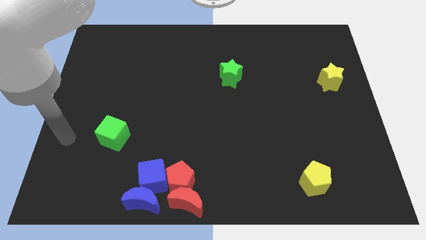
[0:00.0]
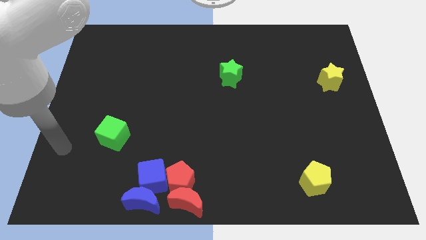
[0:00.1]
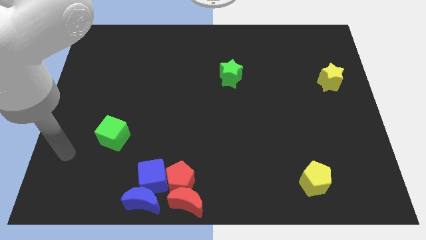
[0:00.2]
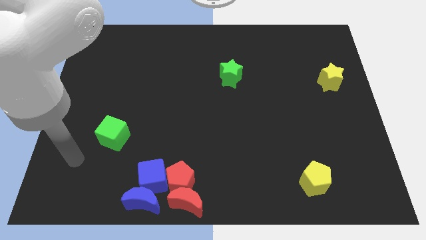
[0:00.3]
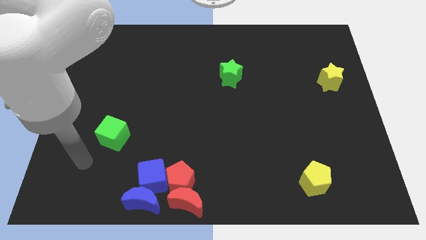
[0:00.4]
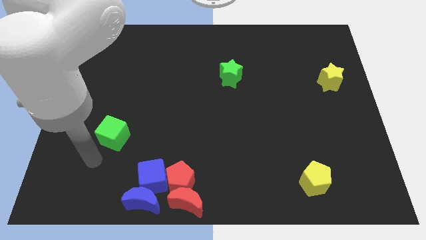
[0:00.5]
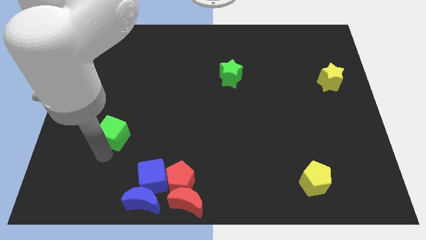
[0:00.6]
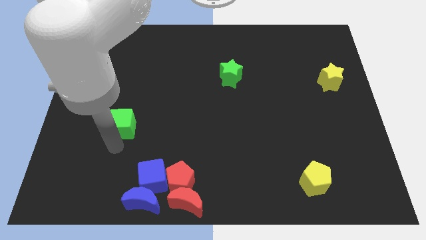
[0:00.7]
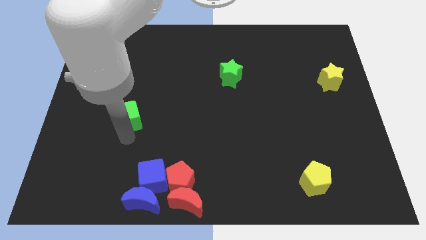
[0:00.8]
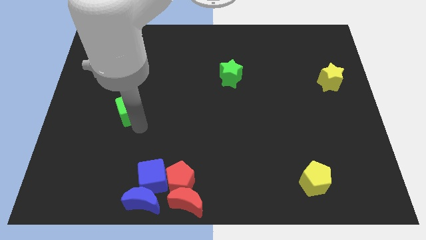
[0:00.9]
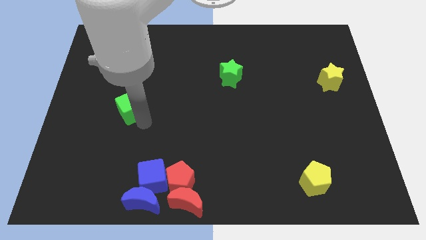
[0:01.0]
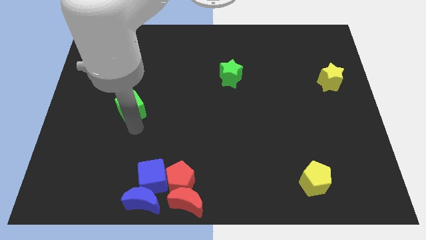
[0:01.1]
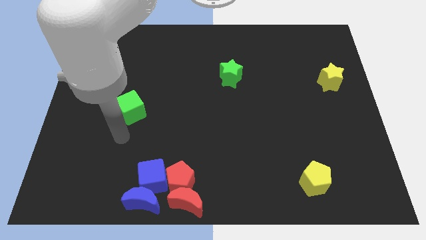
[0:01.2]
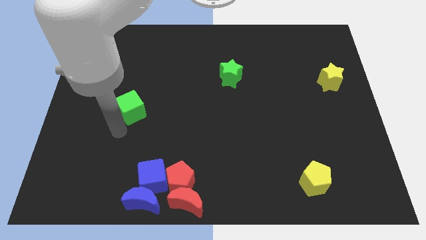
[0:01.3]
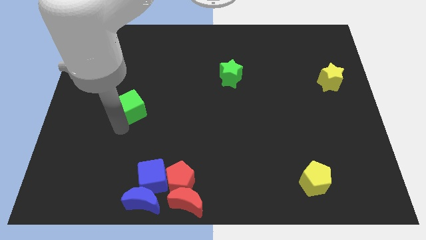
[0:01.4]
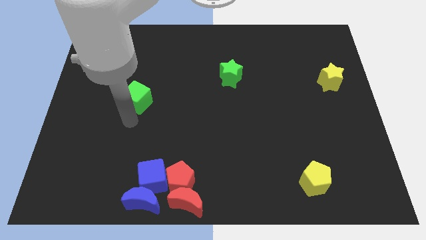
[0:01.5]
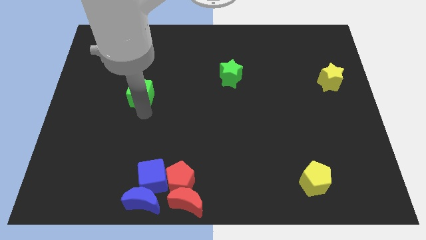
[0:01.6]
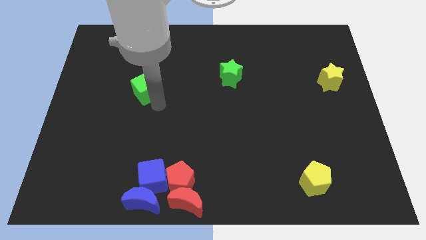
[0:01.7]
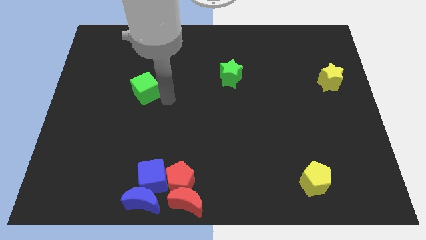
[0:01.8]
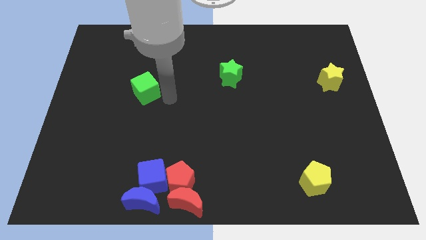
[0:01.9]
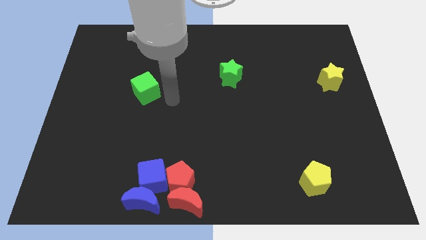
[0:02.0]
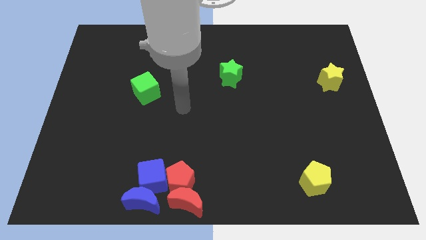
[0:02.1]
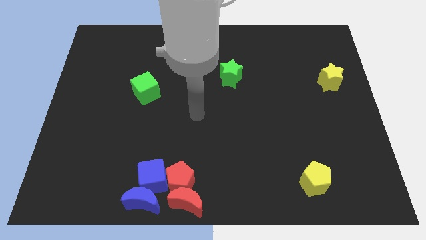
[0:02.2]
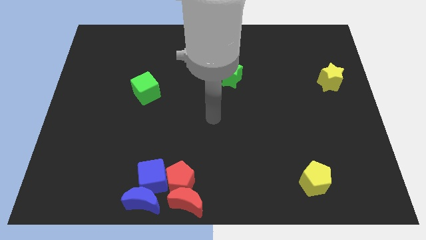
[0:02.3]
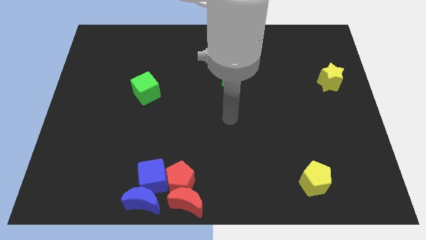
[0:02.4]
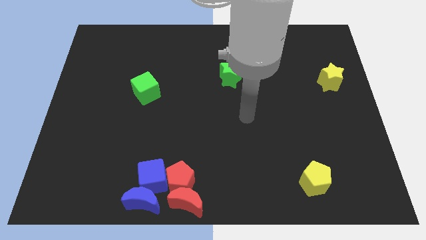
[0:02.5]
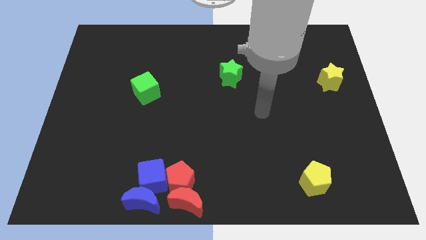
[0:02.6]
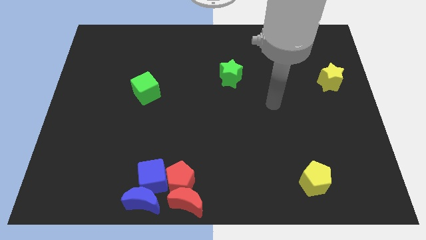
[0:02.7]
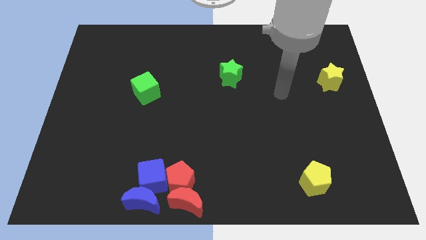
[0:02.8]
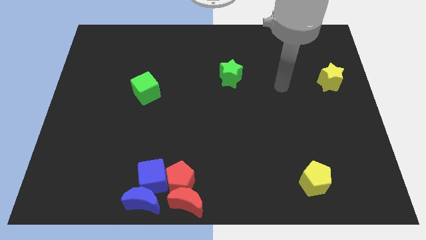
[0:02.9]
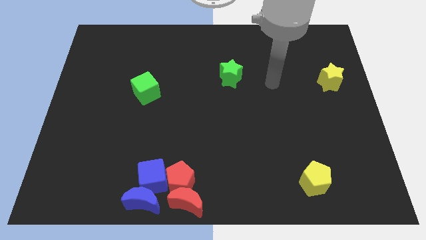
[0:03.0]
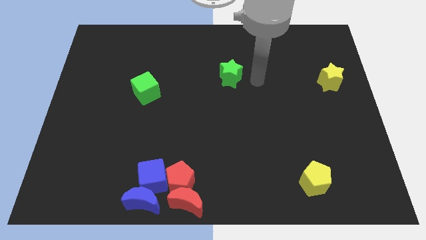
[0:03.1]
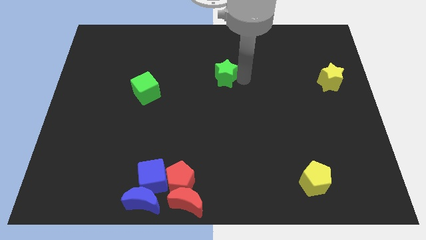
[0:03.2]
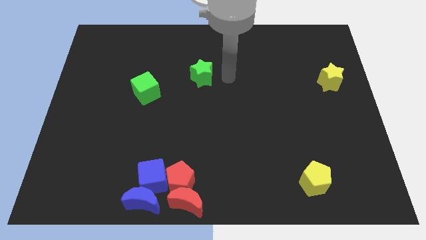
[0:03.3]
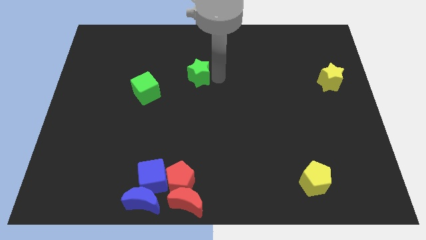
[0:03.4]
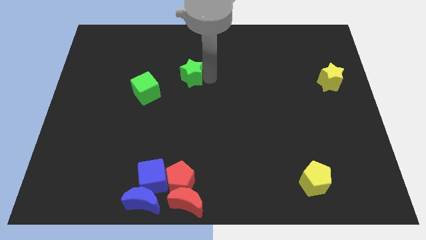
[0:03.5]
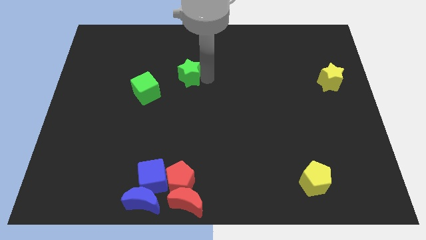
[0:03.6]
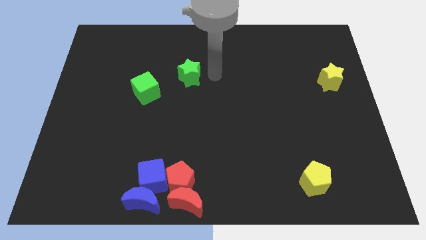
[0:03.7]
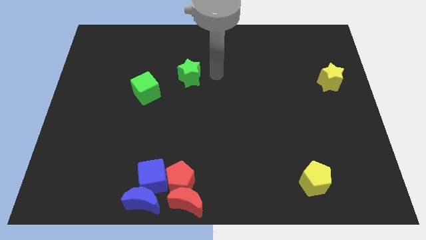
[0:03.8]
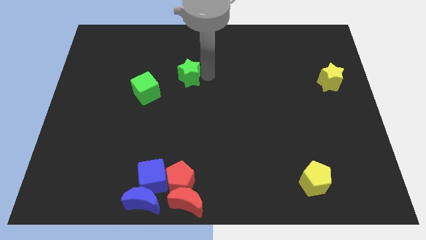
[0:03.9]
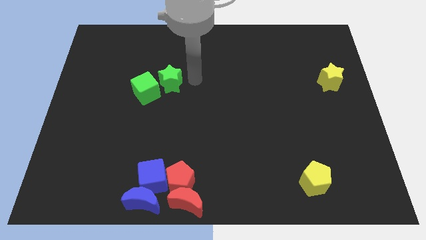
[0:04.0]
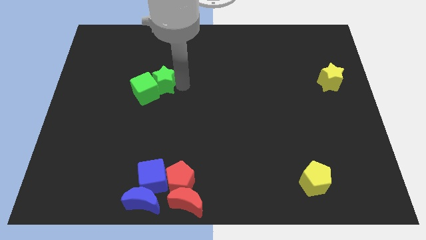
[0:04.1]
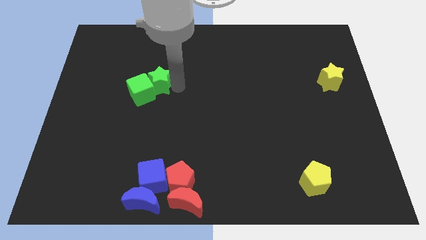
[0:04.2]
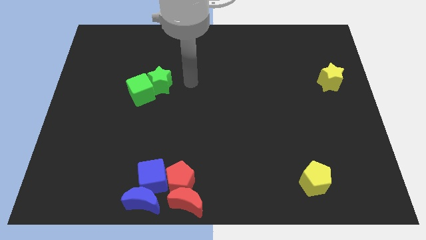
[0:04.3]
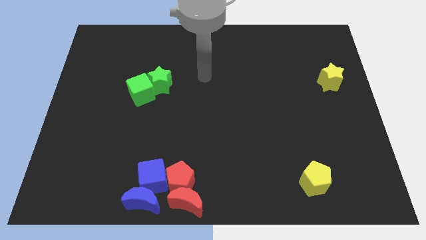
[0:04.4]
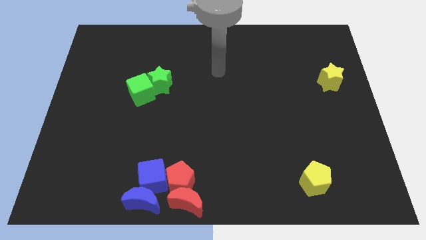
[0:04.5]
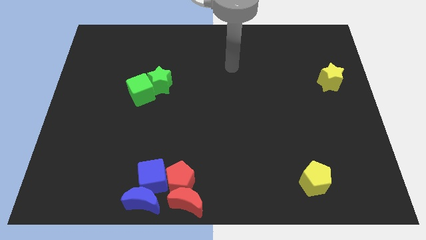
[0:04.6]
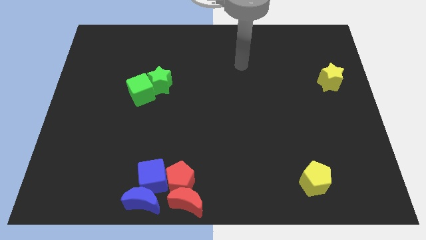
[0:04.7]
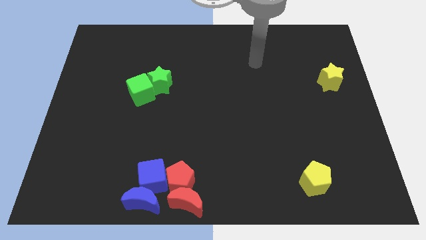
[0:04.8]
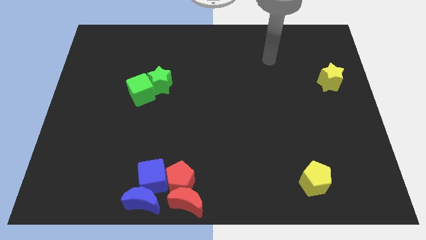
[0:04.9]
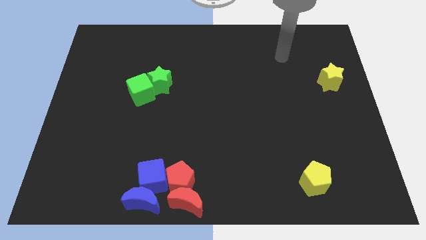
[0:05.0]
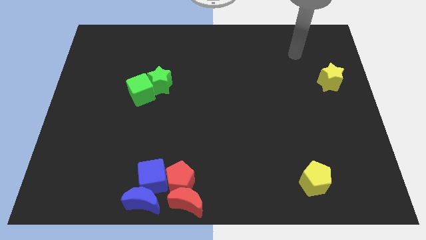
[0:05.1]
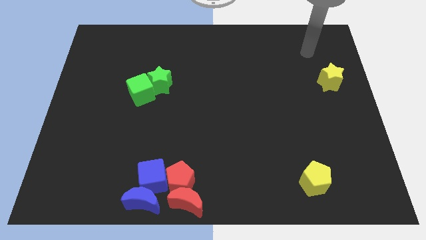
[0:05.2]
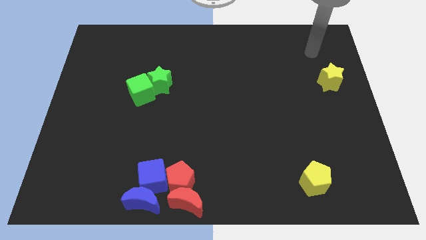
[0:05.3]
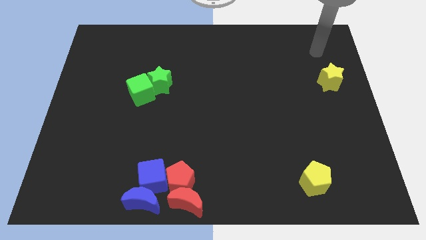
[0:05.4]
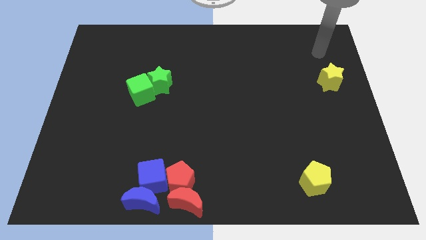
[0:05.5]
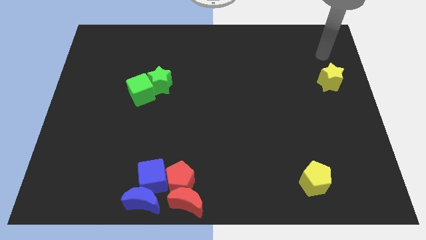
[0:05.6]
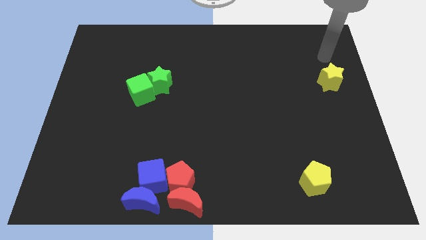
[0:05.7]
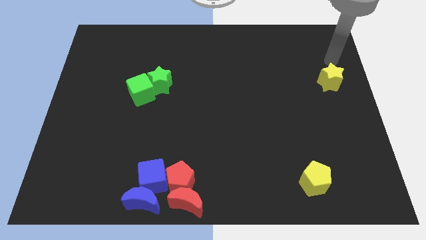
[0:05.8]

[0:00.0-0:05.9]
place both green objects together

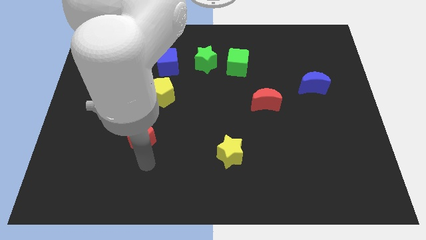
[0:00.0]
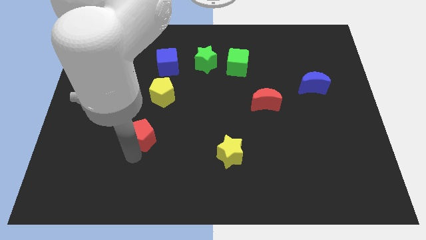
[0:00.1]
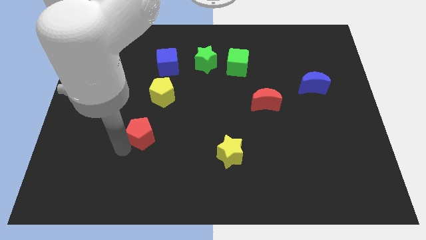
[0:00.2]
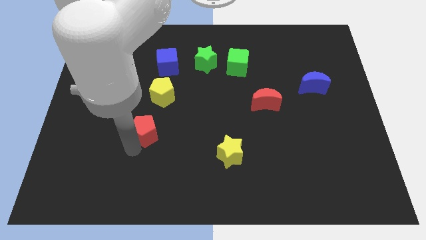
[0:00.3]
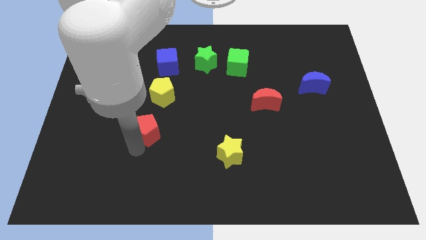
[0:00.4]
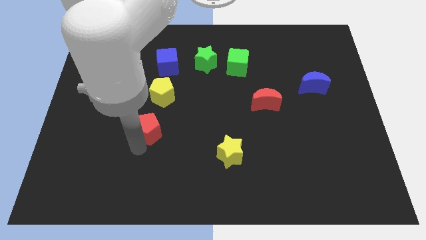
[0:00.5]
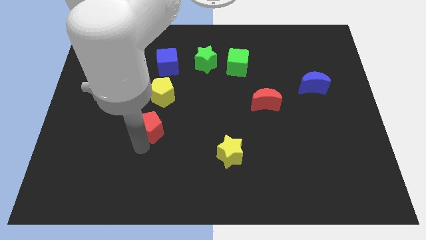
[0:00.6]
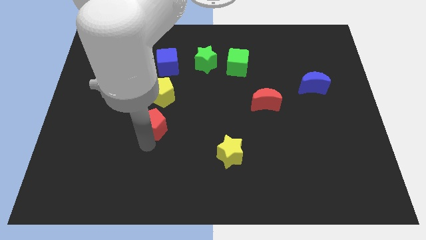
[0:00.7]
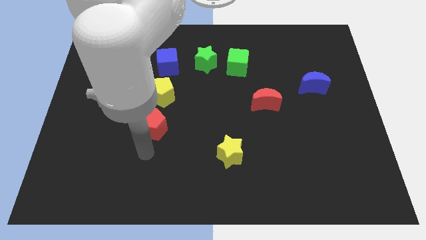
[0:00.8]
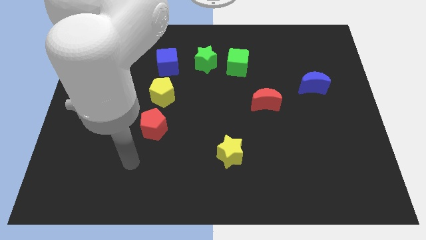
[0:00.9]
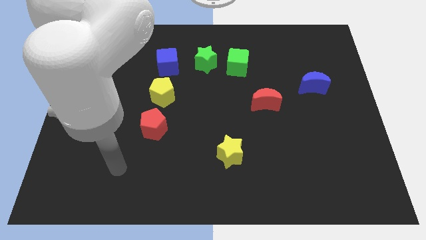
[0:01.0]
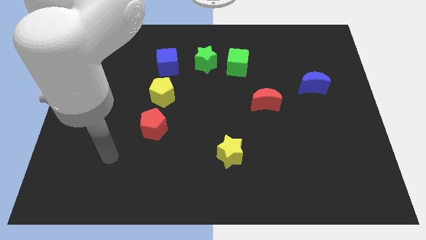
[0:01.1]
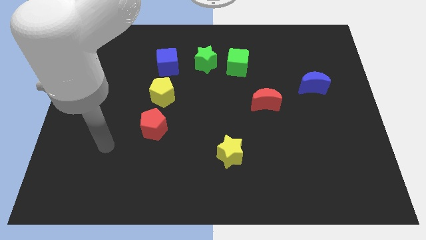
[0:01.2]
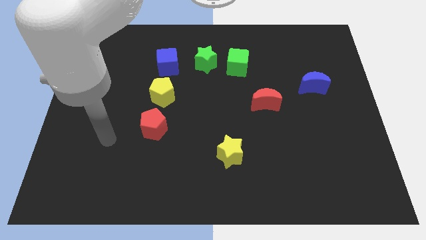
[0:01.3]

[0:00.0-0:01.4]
place red pentagon below yellow pentagon

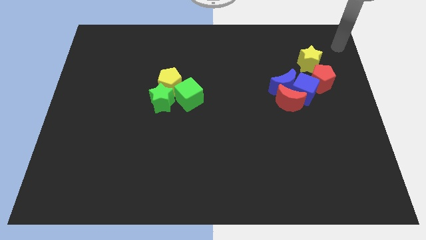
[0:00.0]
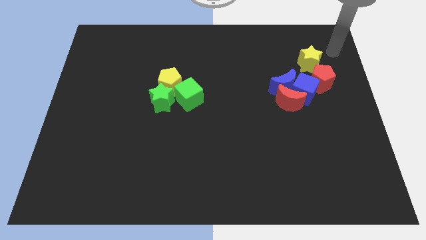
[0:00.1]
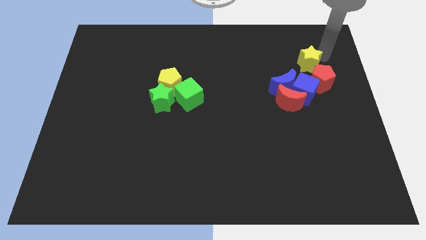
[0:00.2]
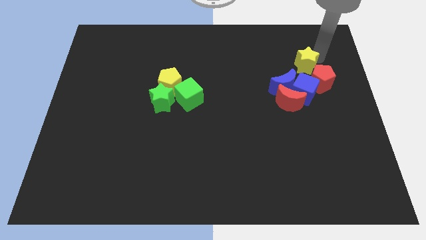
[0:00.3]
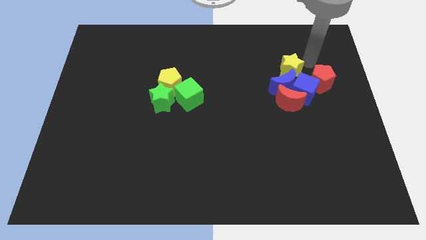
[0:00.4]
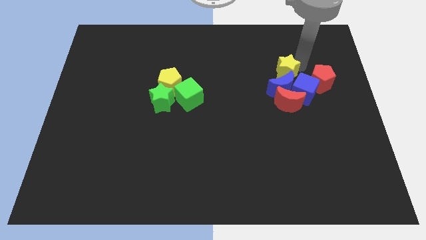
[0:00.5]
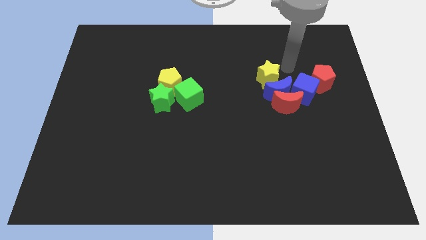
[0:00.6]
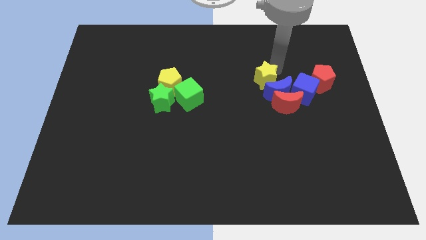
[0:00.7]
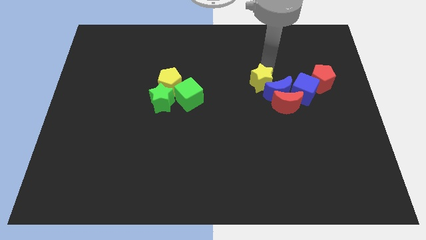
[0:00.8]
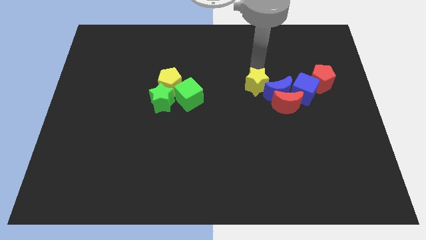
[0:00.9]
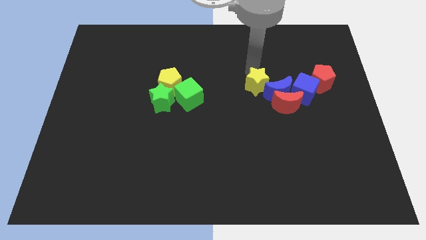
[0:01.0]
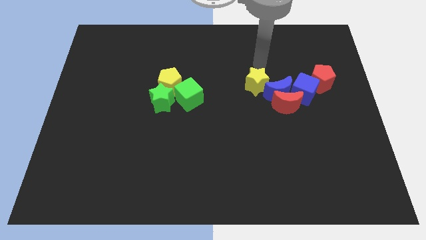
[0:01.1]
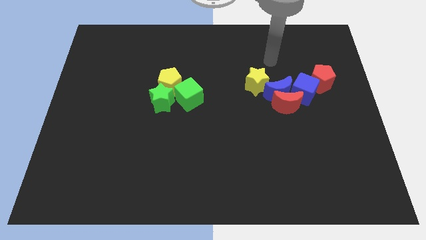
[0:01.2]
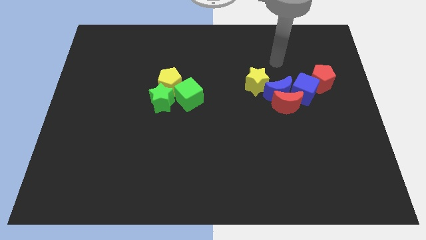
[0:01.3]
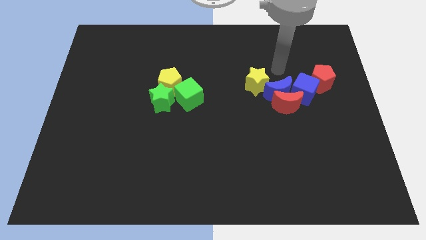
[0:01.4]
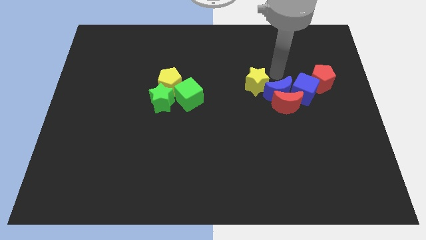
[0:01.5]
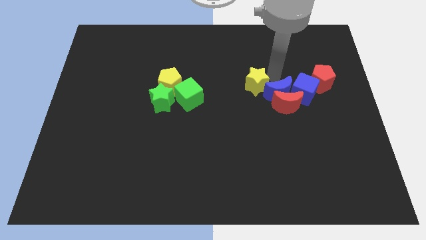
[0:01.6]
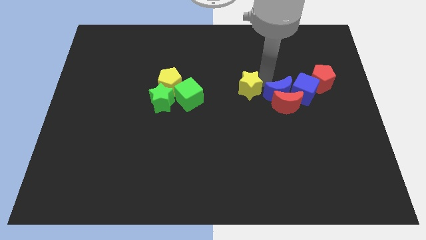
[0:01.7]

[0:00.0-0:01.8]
place the yellow star to the left of the blue resent
